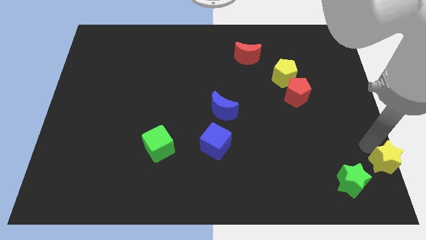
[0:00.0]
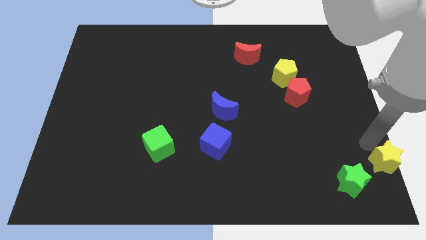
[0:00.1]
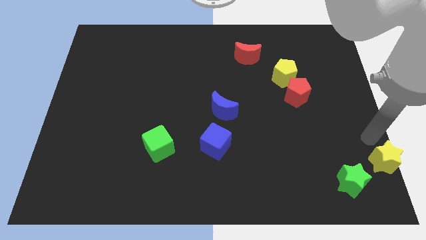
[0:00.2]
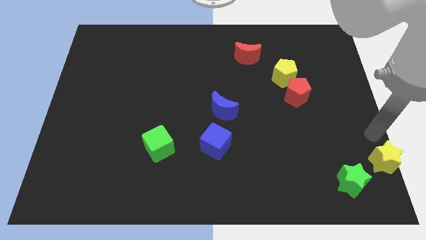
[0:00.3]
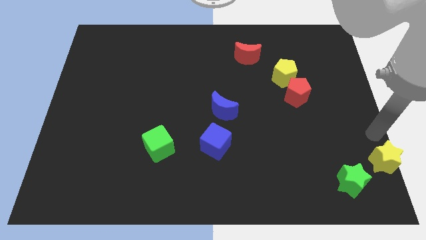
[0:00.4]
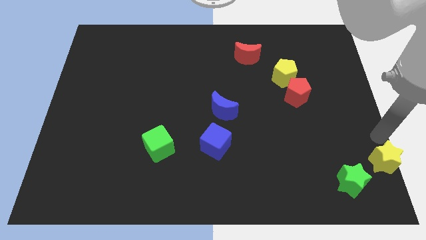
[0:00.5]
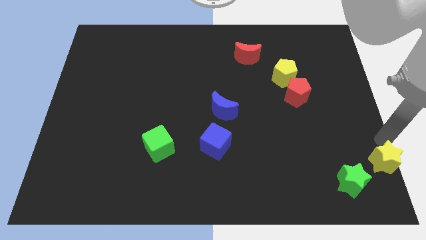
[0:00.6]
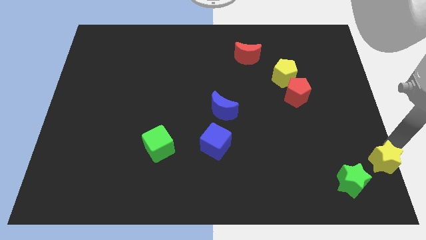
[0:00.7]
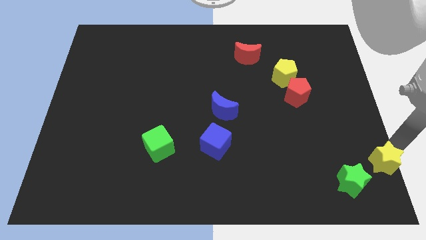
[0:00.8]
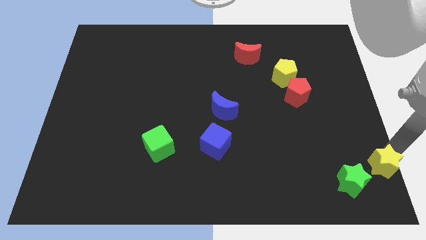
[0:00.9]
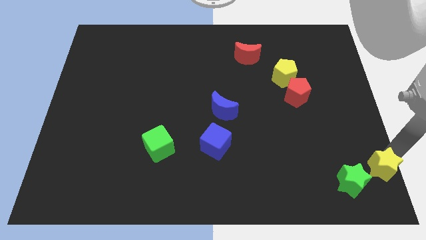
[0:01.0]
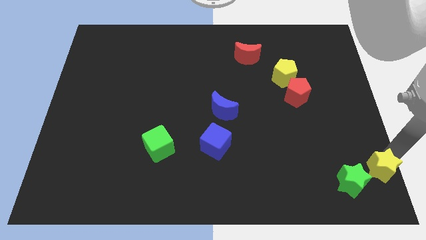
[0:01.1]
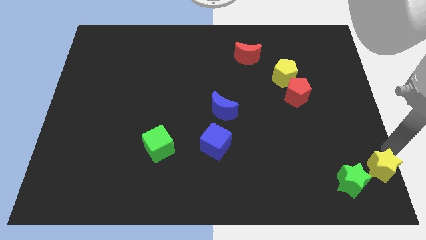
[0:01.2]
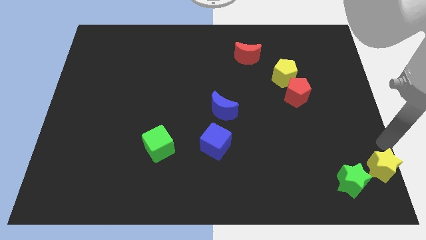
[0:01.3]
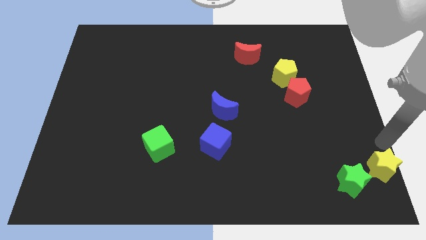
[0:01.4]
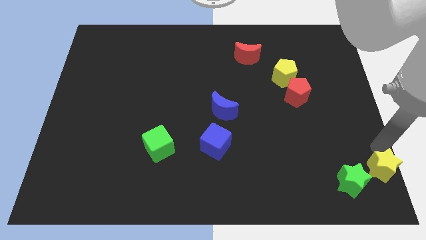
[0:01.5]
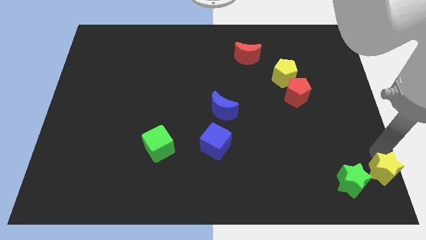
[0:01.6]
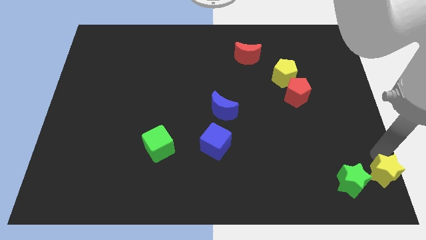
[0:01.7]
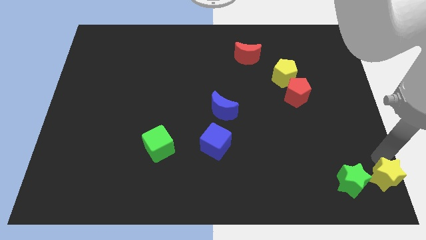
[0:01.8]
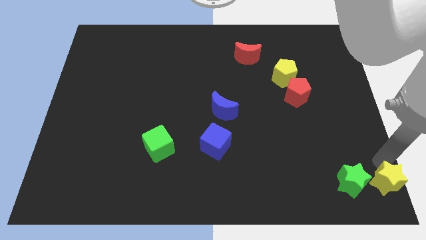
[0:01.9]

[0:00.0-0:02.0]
place the yellow star right to the green star

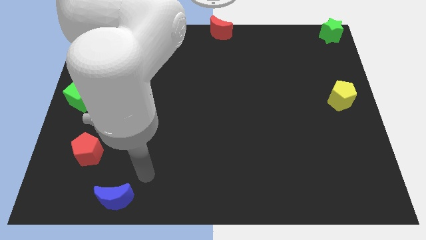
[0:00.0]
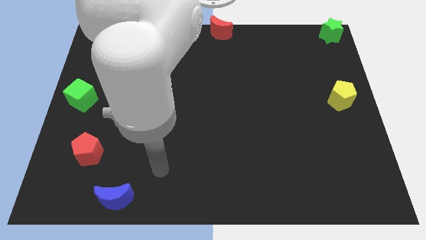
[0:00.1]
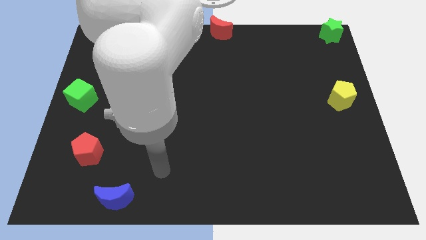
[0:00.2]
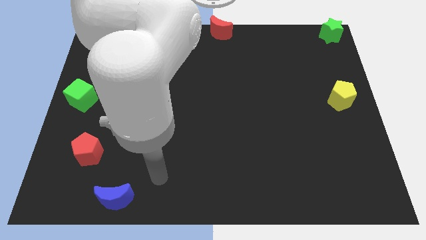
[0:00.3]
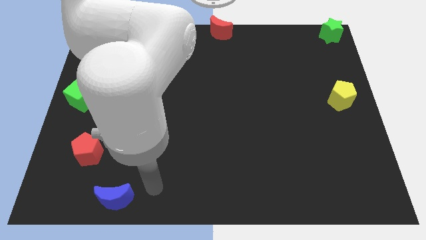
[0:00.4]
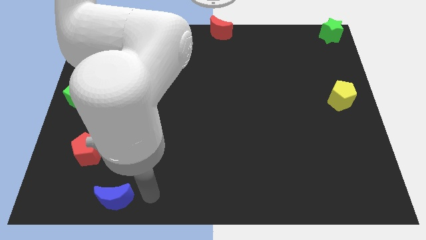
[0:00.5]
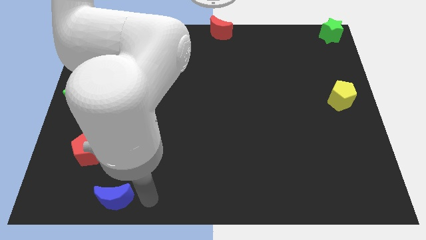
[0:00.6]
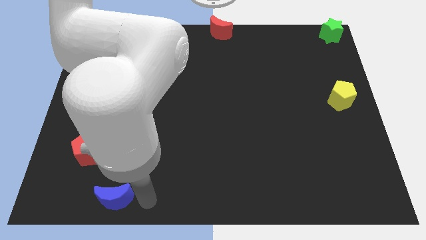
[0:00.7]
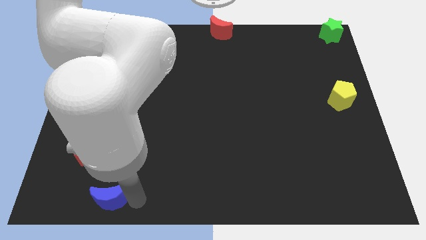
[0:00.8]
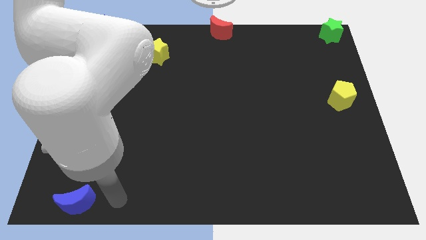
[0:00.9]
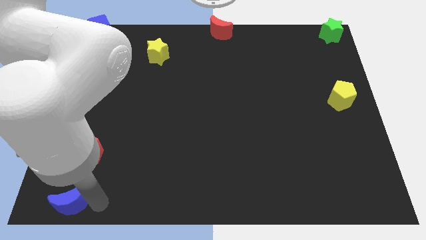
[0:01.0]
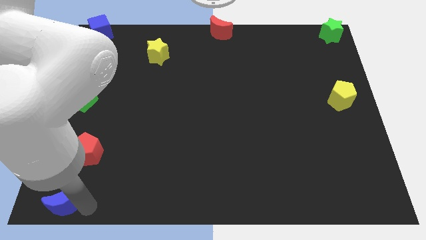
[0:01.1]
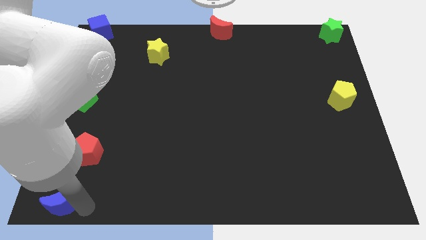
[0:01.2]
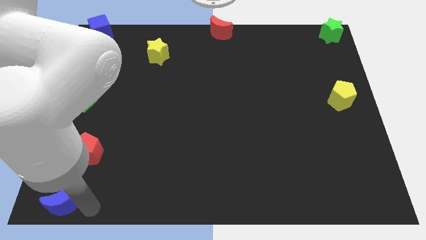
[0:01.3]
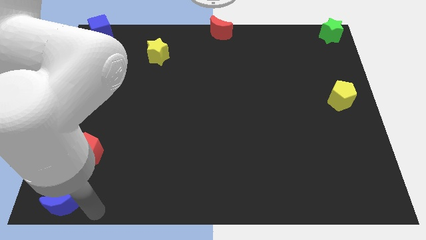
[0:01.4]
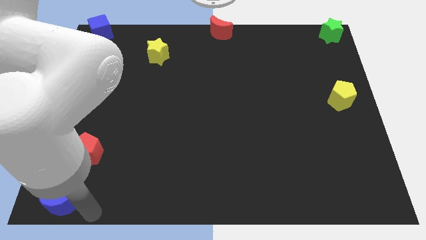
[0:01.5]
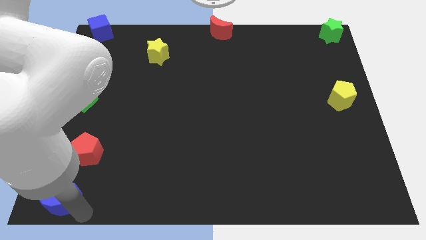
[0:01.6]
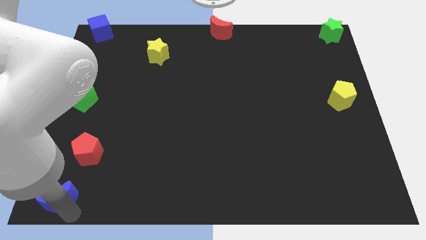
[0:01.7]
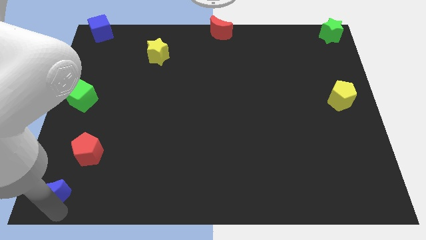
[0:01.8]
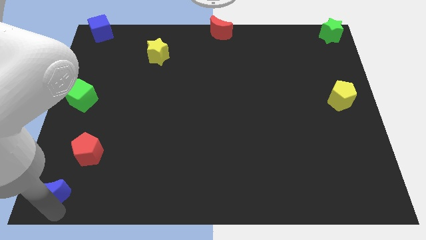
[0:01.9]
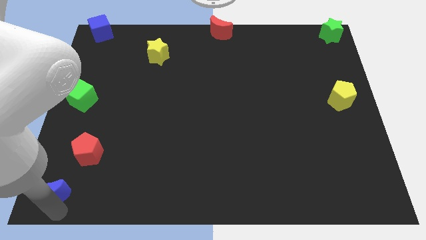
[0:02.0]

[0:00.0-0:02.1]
move blue crescent to the bottom left corner

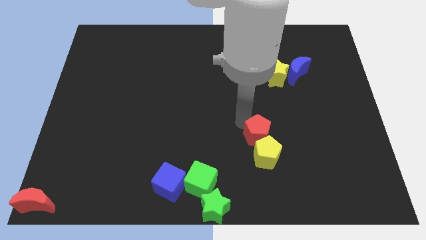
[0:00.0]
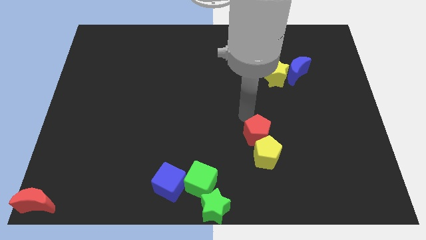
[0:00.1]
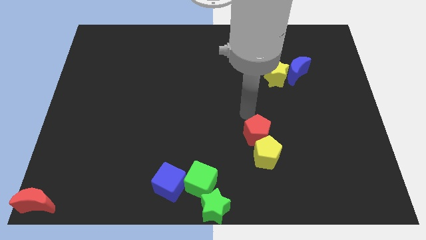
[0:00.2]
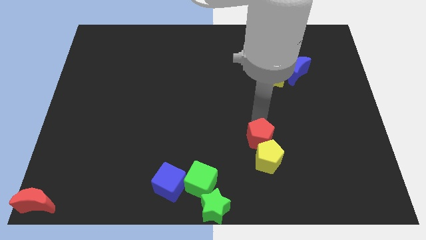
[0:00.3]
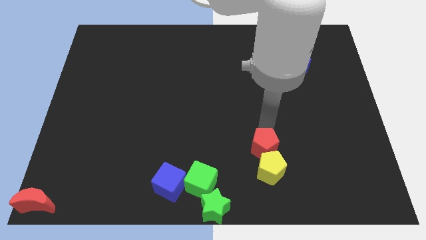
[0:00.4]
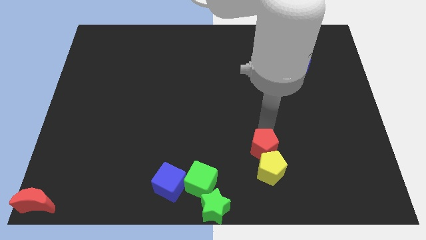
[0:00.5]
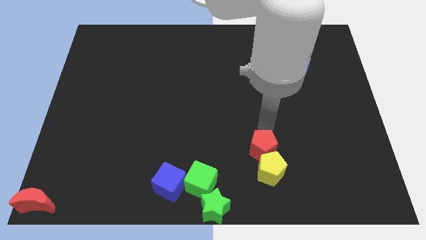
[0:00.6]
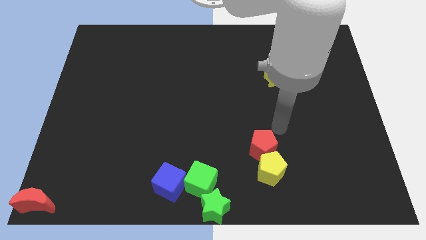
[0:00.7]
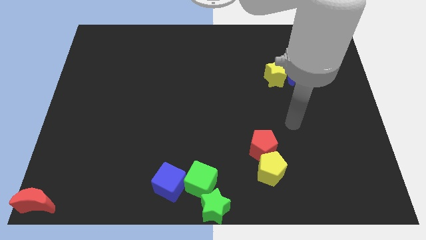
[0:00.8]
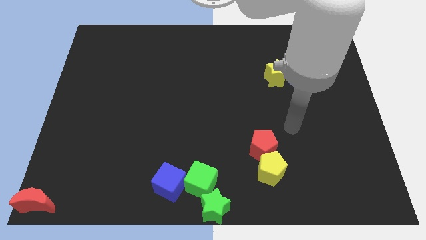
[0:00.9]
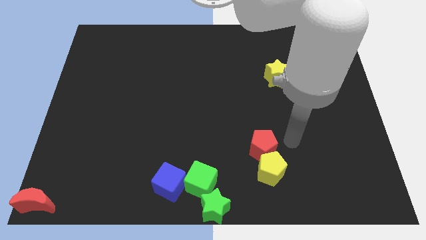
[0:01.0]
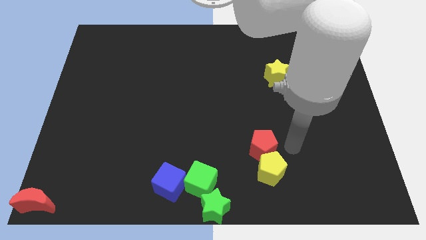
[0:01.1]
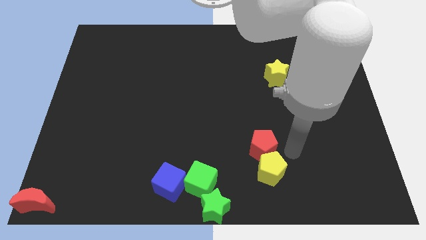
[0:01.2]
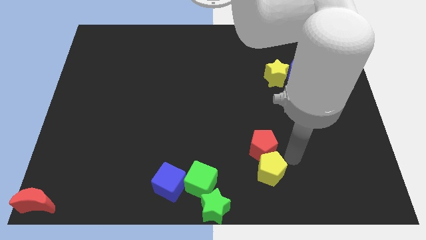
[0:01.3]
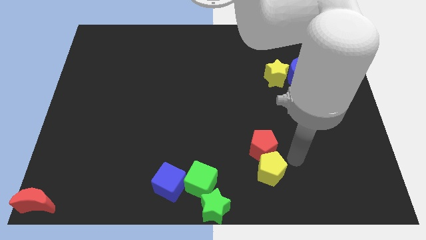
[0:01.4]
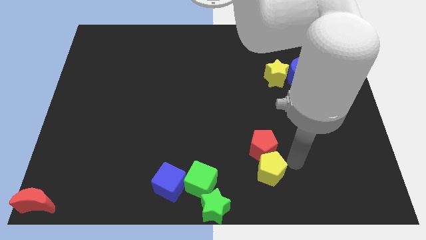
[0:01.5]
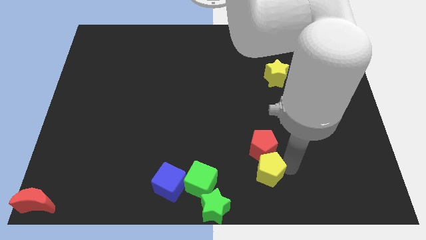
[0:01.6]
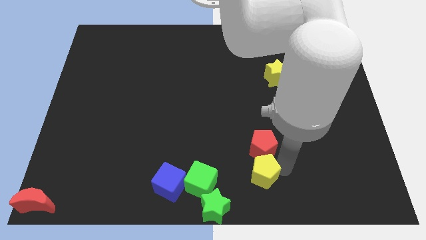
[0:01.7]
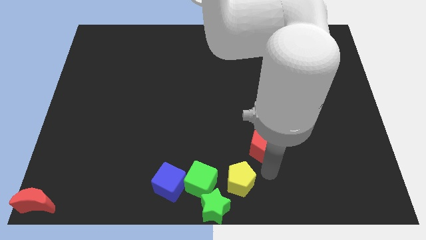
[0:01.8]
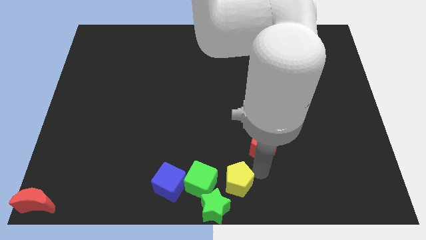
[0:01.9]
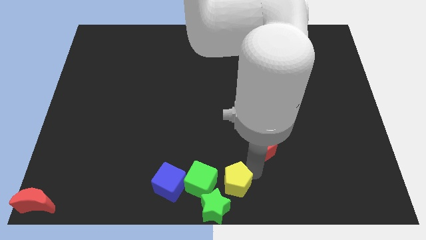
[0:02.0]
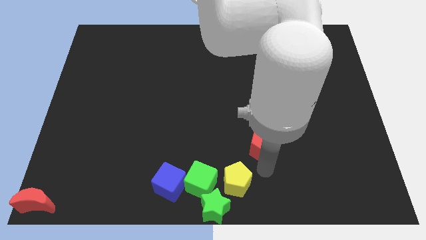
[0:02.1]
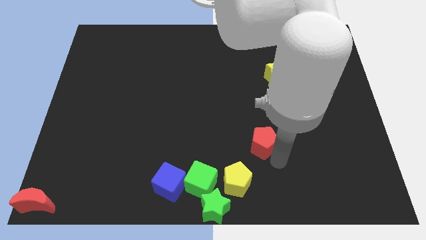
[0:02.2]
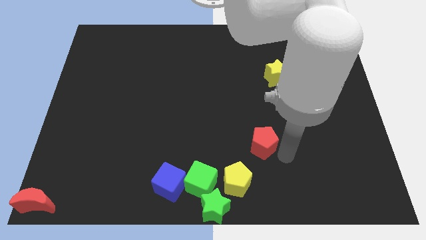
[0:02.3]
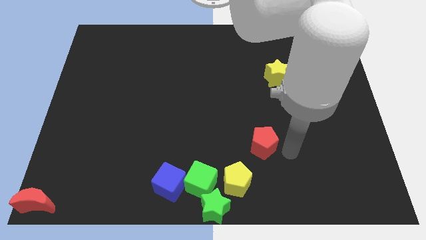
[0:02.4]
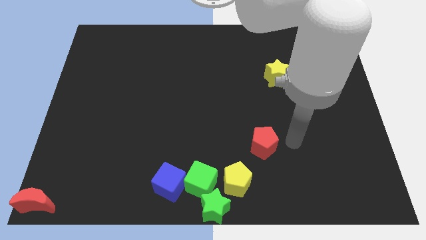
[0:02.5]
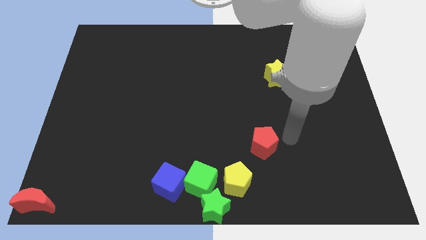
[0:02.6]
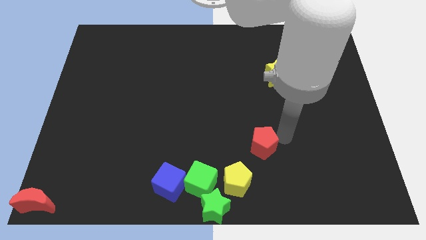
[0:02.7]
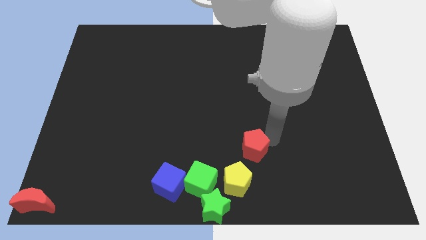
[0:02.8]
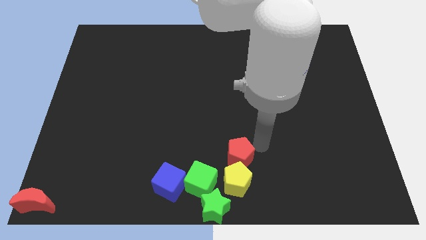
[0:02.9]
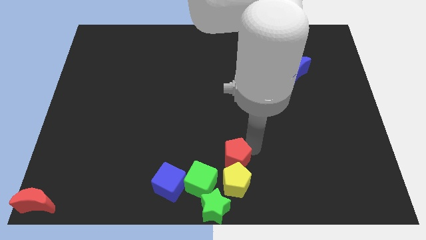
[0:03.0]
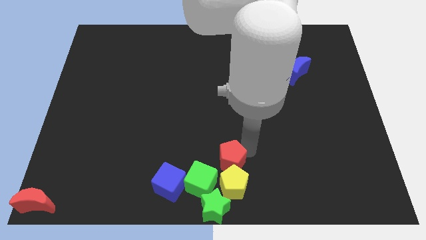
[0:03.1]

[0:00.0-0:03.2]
push red pentagon yellow pentagon into the group of blocks

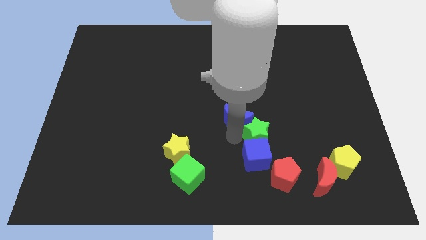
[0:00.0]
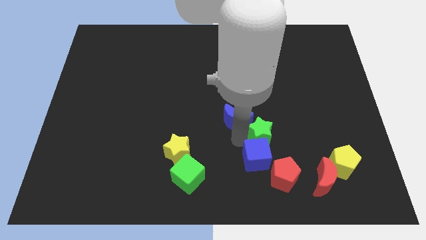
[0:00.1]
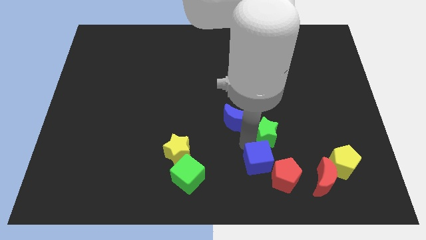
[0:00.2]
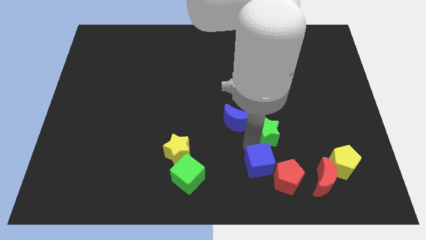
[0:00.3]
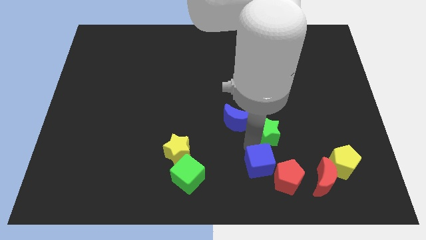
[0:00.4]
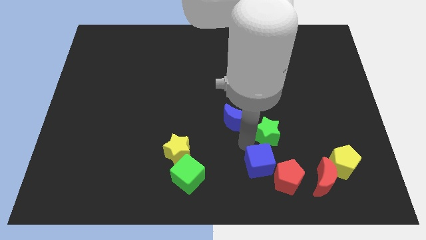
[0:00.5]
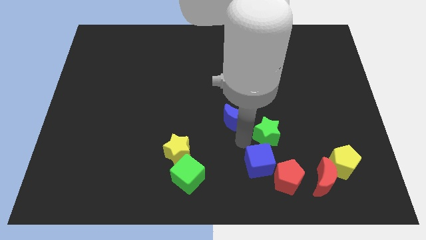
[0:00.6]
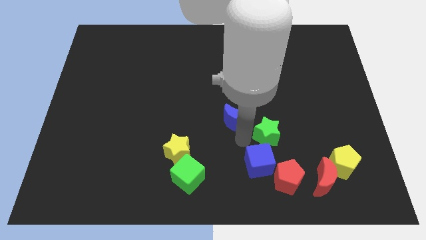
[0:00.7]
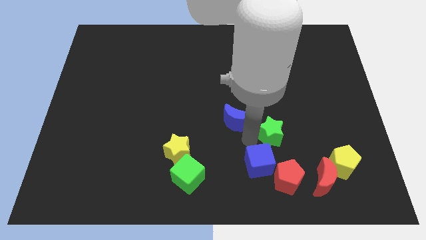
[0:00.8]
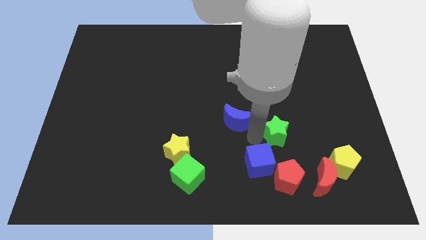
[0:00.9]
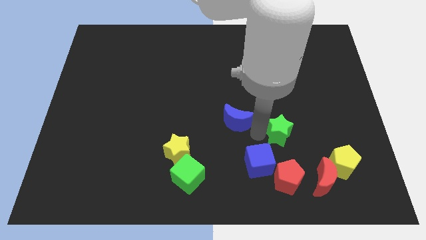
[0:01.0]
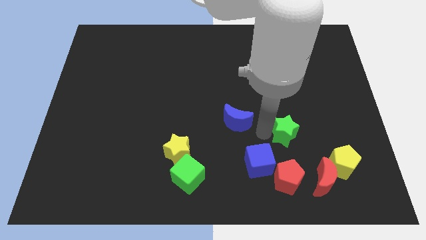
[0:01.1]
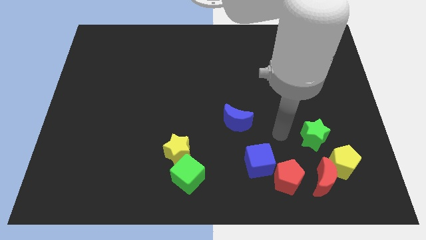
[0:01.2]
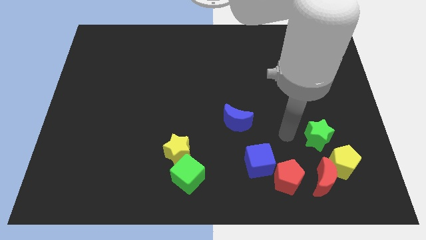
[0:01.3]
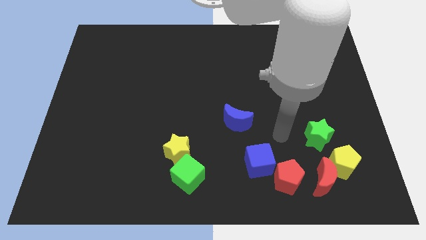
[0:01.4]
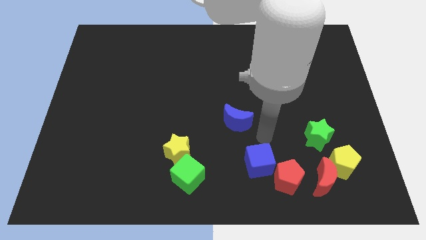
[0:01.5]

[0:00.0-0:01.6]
push the green star near to the yellow pentagon
